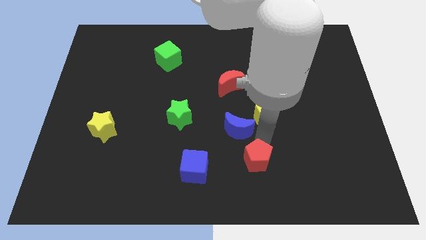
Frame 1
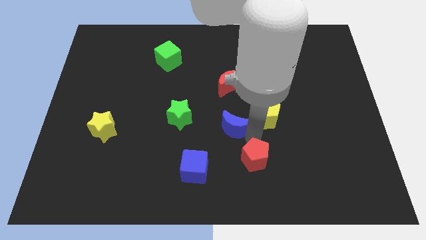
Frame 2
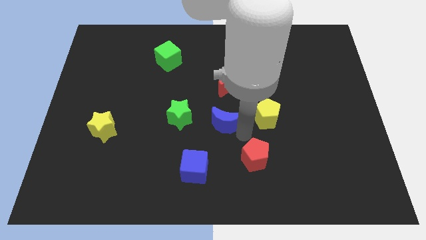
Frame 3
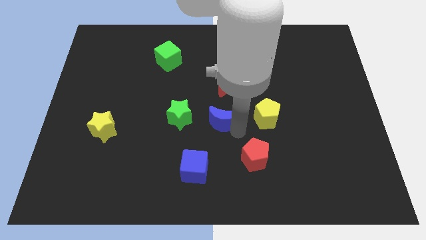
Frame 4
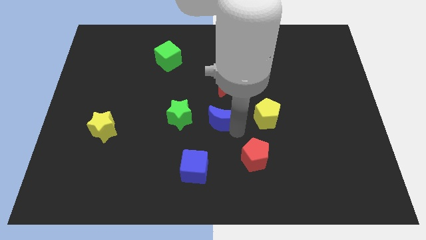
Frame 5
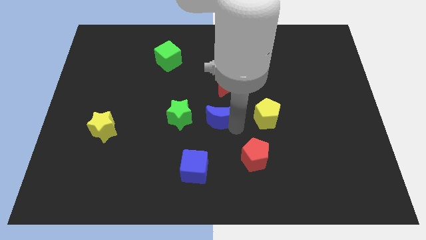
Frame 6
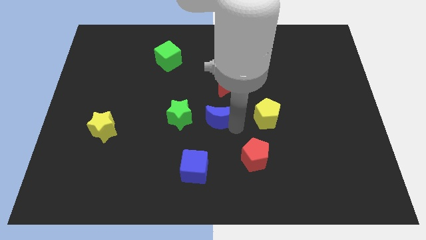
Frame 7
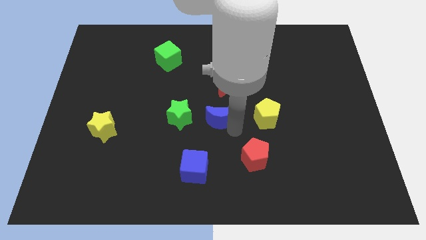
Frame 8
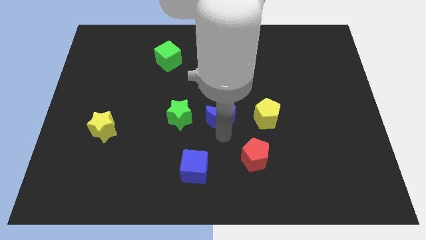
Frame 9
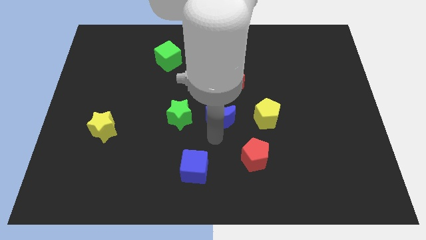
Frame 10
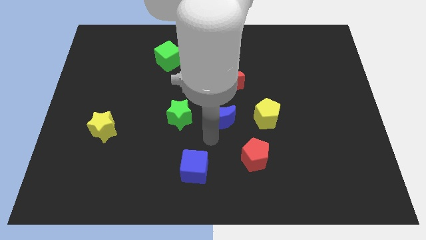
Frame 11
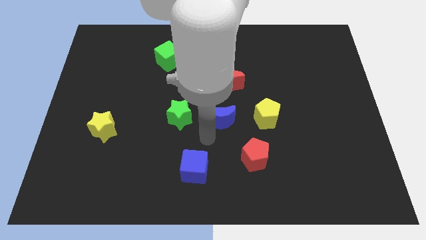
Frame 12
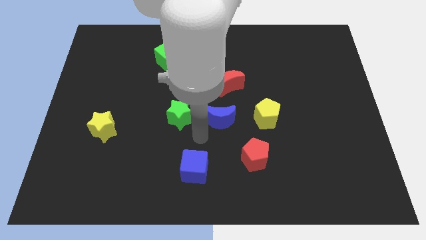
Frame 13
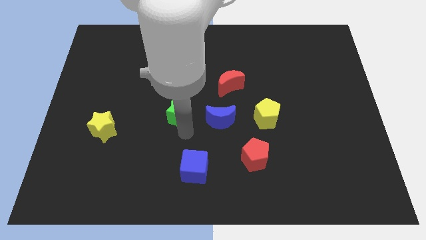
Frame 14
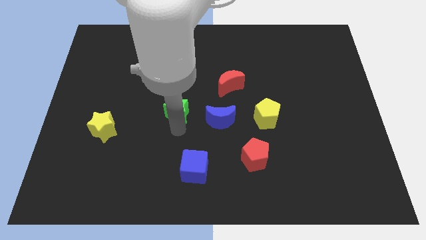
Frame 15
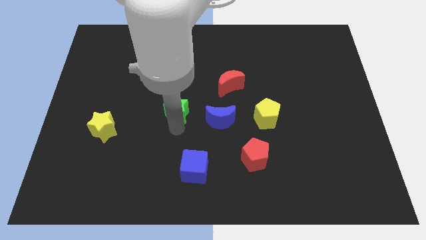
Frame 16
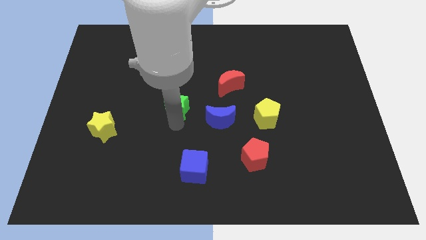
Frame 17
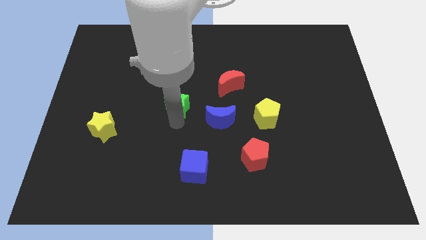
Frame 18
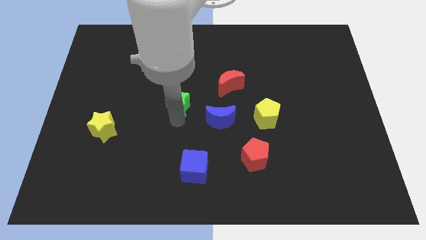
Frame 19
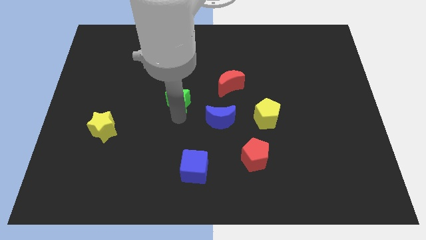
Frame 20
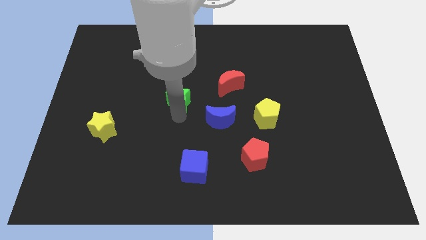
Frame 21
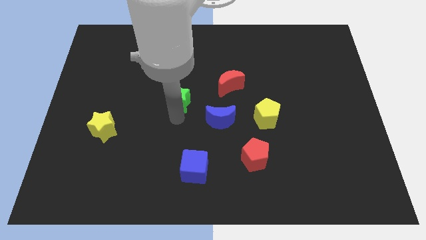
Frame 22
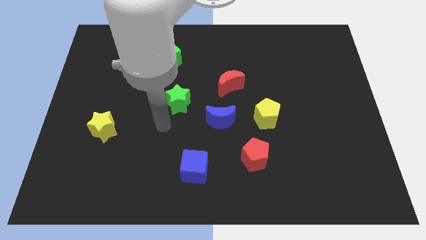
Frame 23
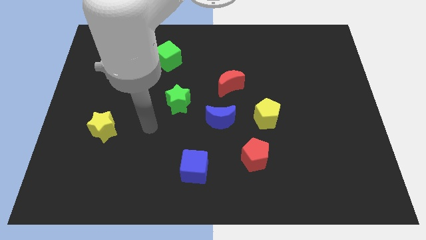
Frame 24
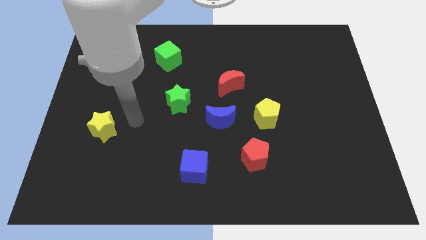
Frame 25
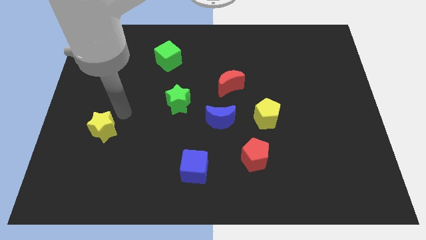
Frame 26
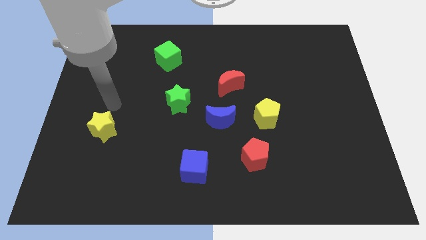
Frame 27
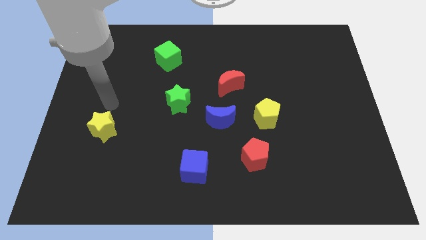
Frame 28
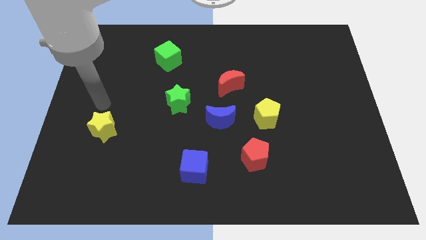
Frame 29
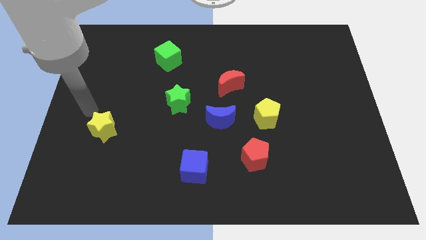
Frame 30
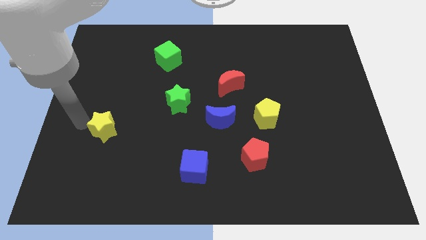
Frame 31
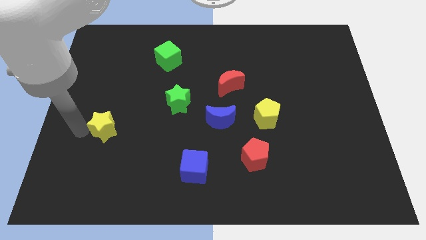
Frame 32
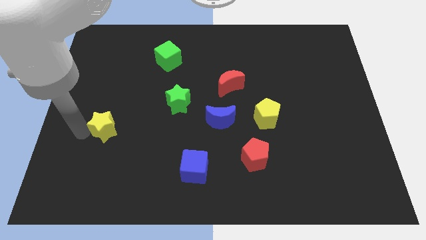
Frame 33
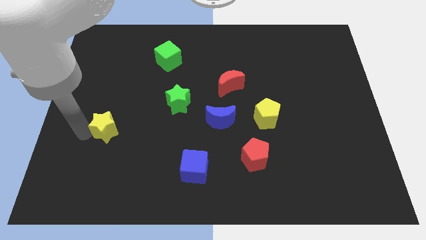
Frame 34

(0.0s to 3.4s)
place the blue crescent in between the green star and the yellow pentagon

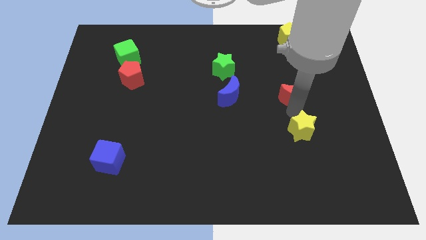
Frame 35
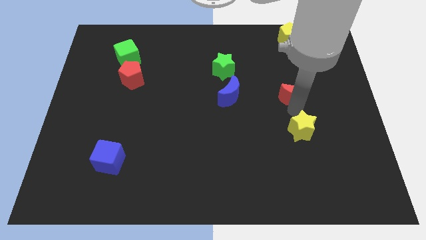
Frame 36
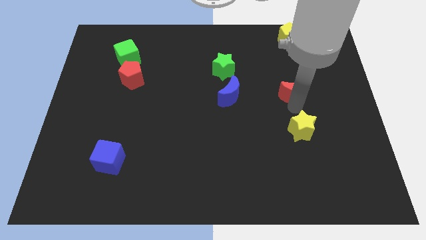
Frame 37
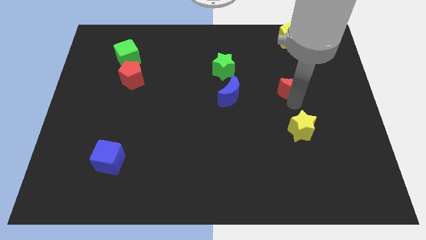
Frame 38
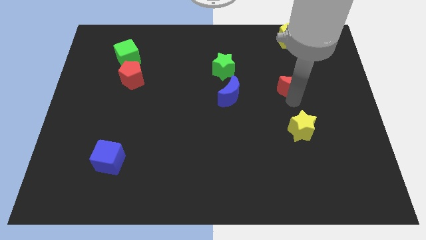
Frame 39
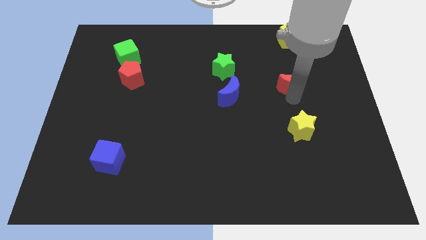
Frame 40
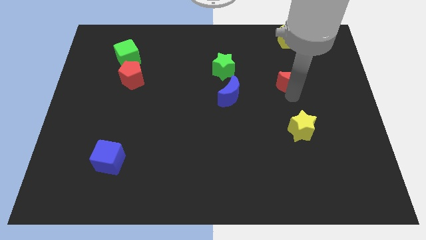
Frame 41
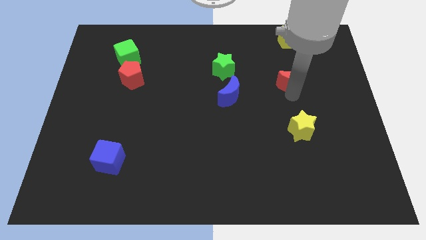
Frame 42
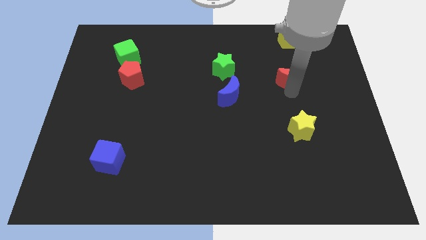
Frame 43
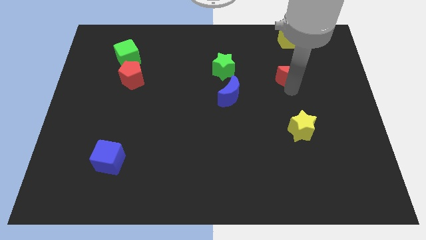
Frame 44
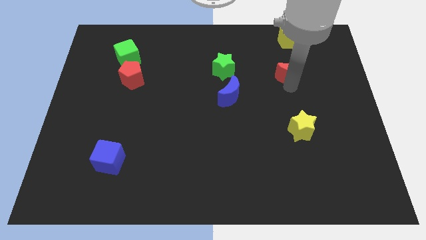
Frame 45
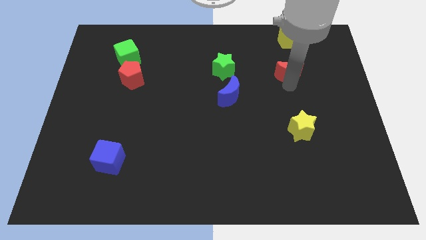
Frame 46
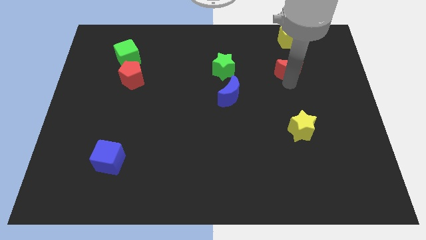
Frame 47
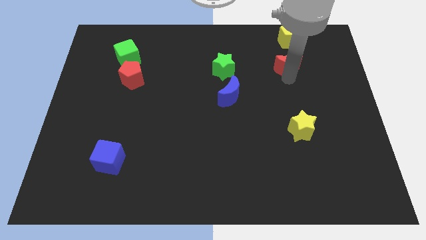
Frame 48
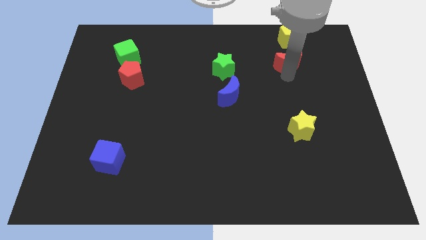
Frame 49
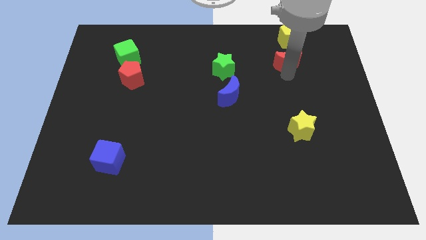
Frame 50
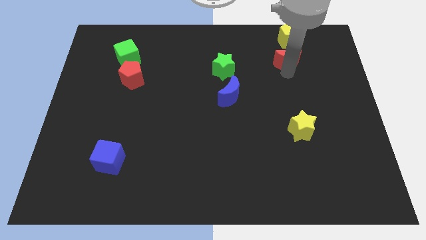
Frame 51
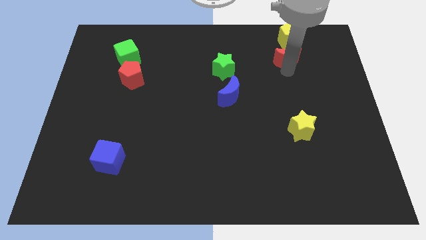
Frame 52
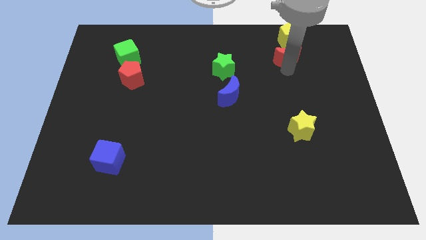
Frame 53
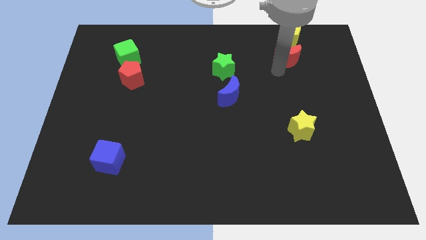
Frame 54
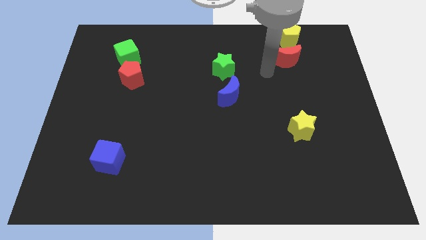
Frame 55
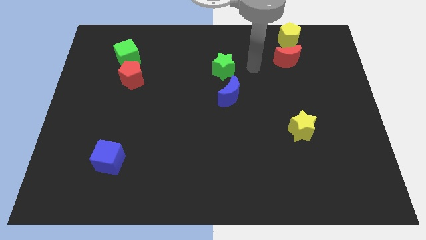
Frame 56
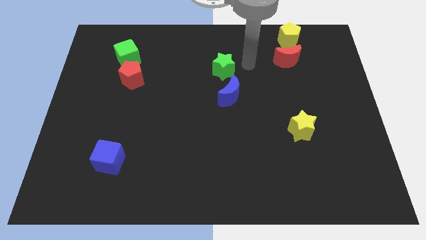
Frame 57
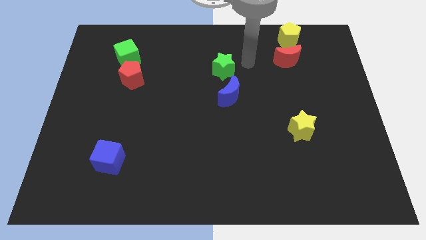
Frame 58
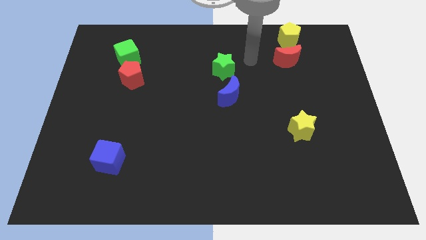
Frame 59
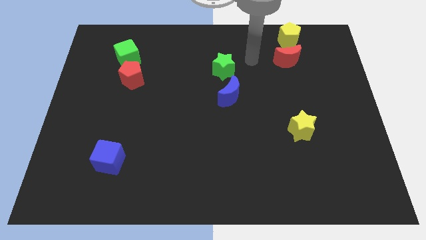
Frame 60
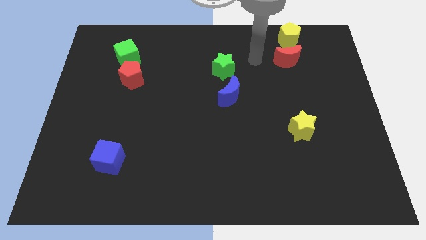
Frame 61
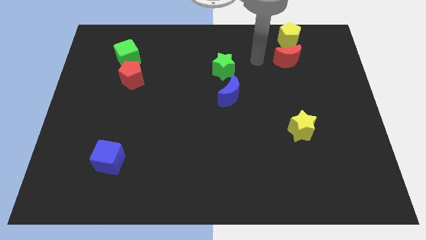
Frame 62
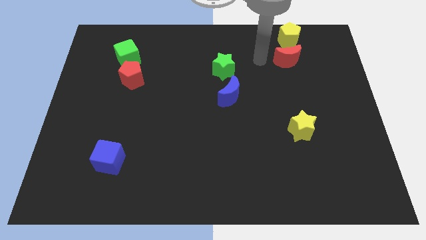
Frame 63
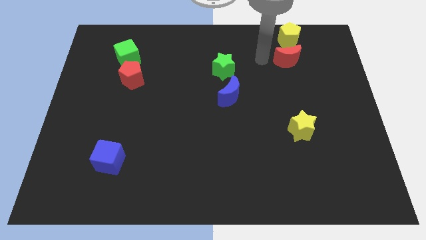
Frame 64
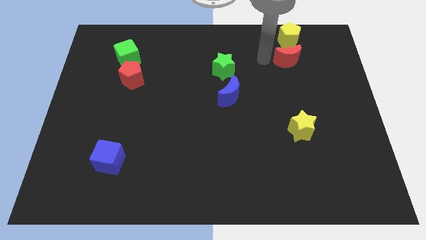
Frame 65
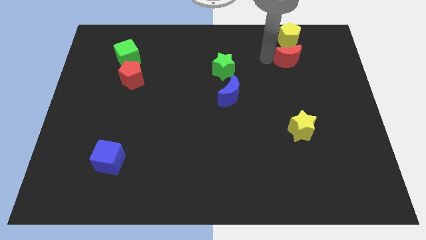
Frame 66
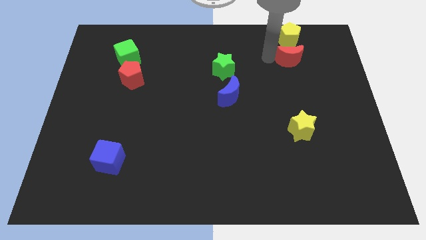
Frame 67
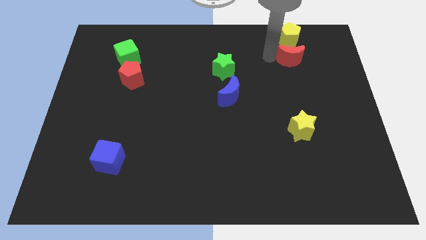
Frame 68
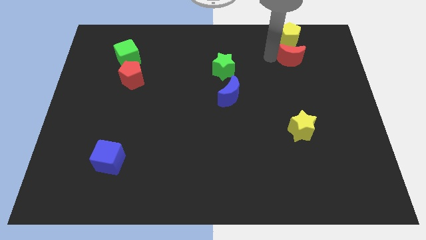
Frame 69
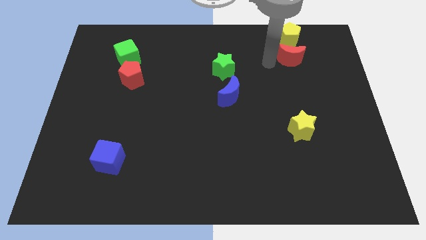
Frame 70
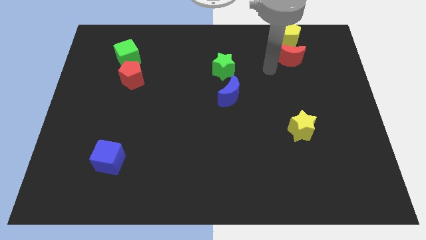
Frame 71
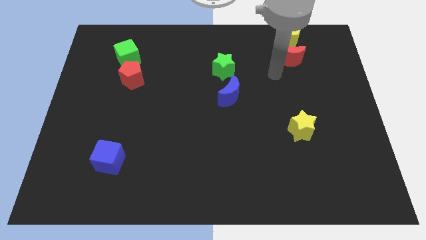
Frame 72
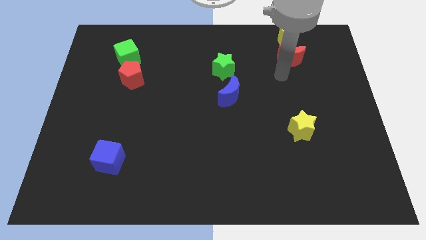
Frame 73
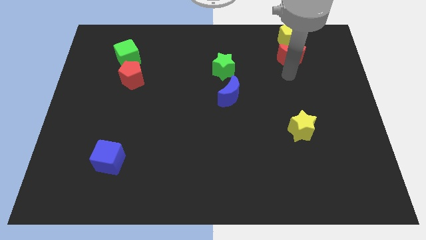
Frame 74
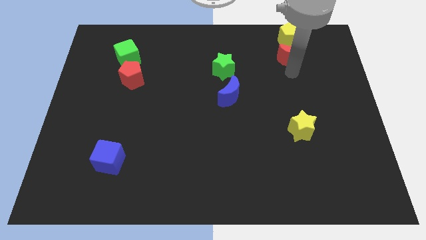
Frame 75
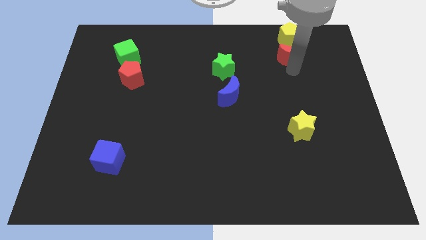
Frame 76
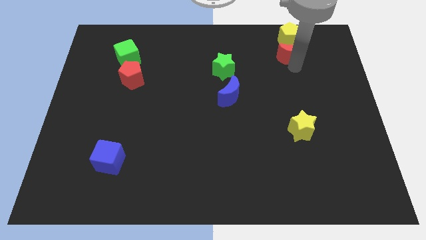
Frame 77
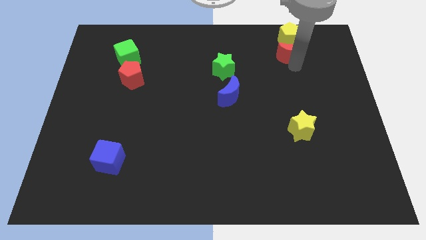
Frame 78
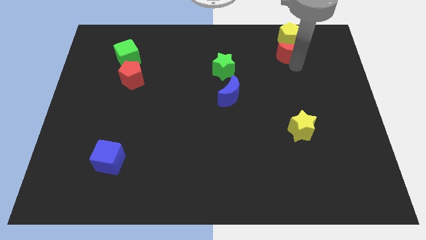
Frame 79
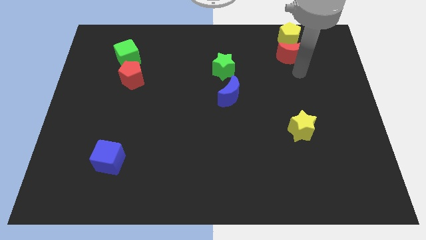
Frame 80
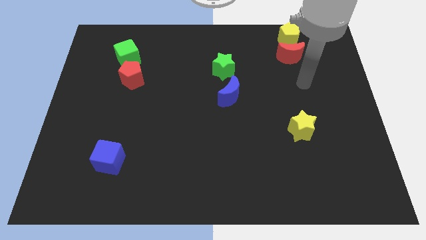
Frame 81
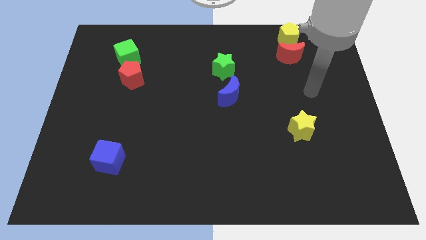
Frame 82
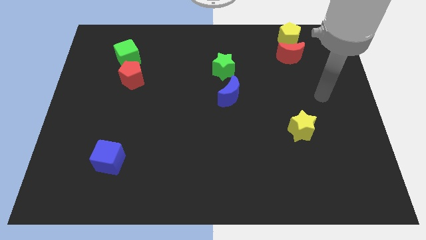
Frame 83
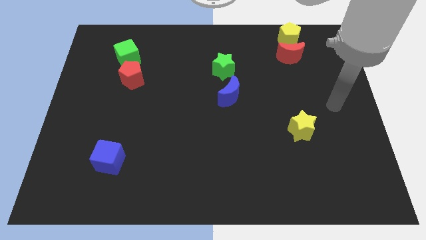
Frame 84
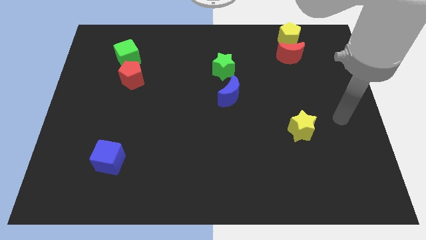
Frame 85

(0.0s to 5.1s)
place the red crescent below the yellow pentagon

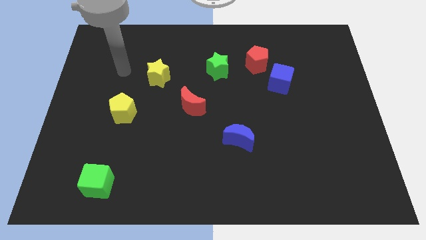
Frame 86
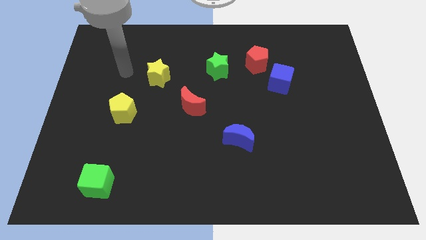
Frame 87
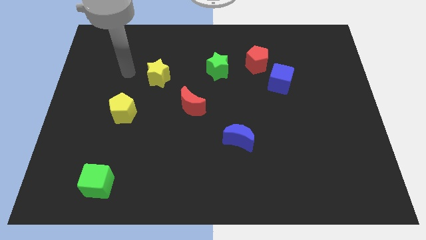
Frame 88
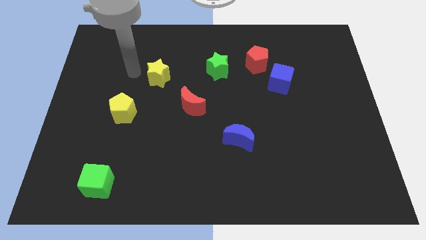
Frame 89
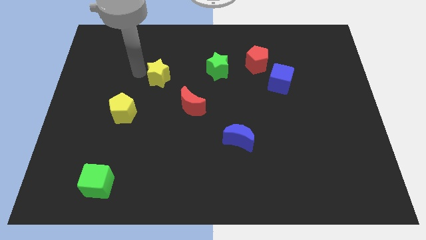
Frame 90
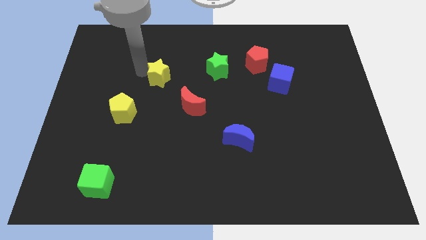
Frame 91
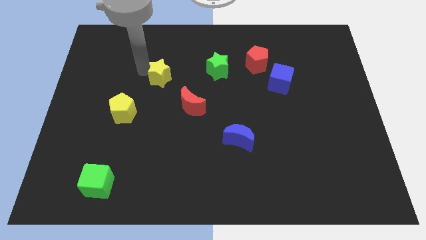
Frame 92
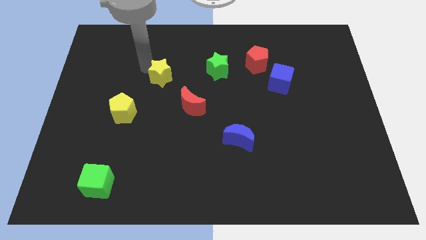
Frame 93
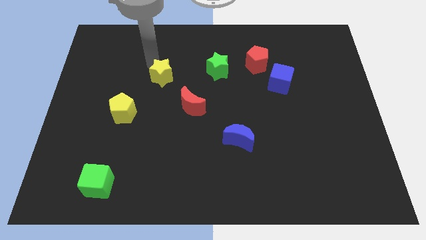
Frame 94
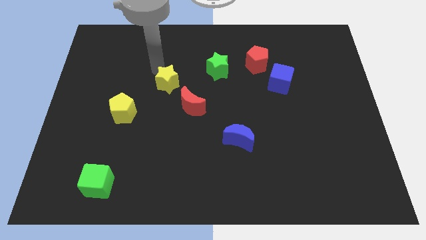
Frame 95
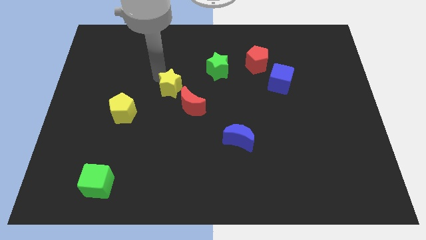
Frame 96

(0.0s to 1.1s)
move yellow star towards red moon
